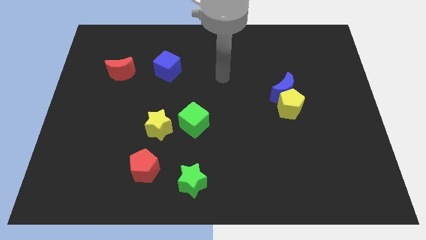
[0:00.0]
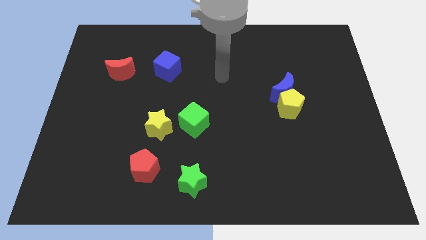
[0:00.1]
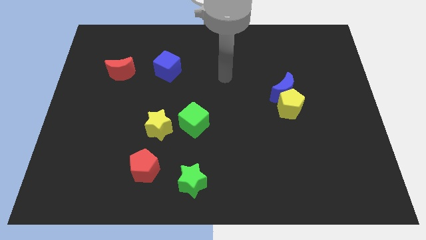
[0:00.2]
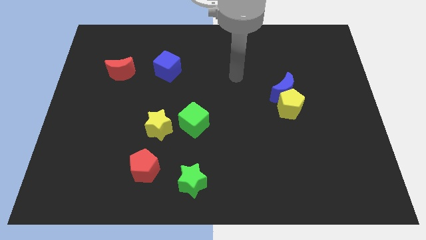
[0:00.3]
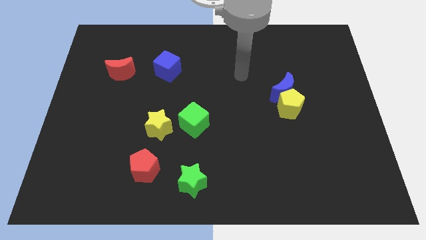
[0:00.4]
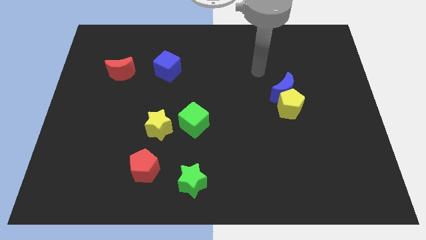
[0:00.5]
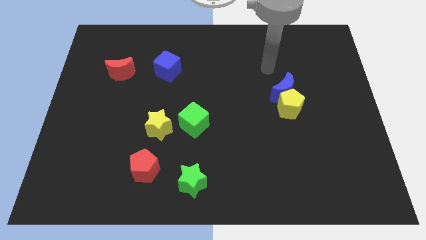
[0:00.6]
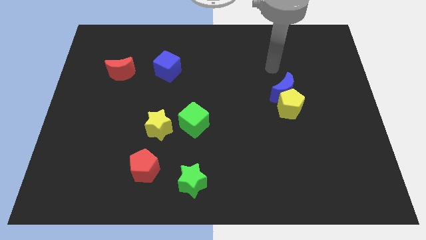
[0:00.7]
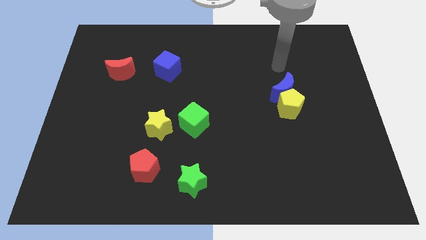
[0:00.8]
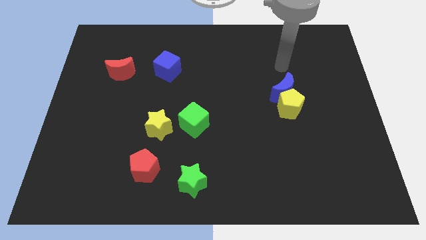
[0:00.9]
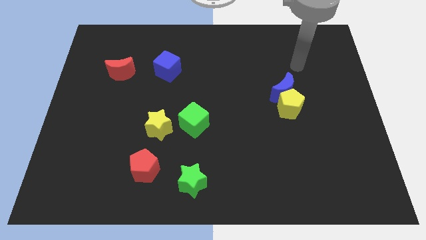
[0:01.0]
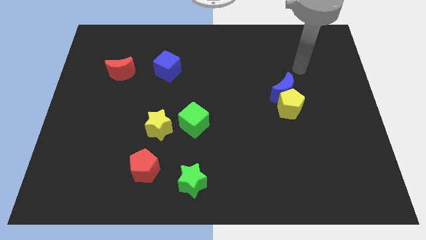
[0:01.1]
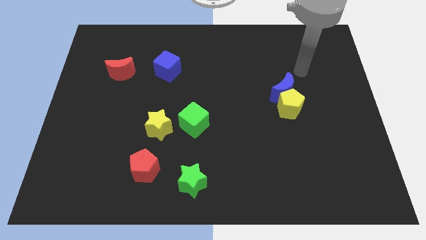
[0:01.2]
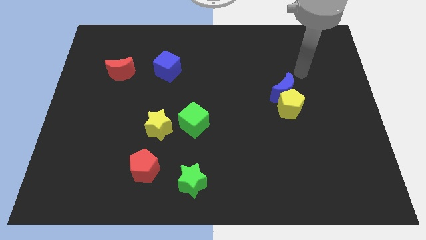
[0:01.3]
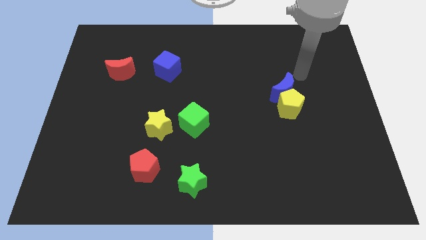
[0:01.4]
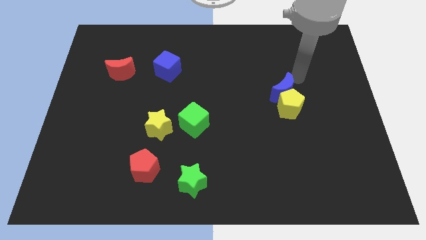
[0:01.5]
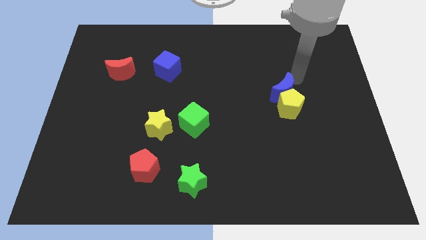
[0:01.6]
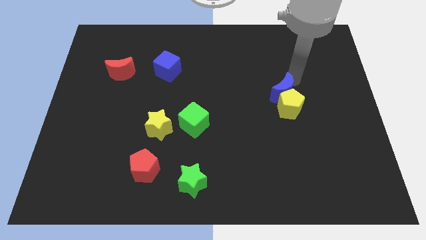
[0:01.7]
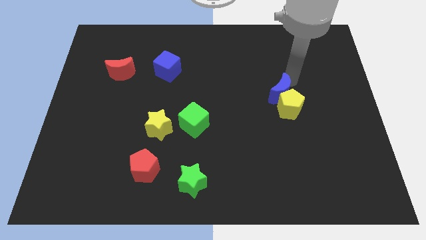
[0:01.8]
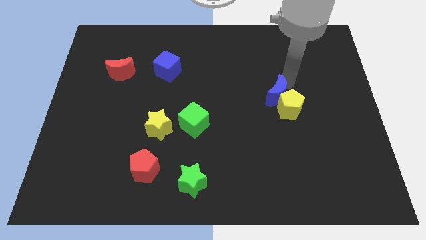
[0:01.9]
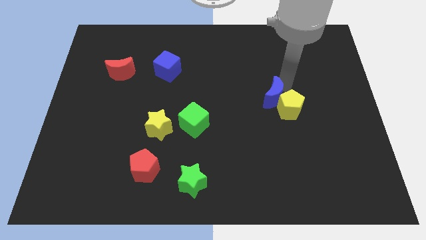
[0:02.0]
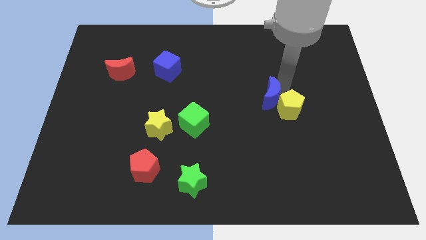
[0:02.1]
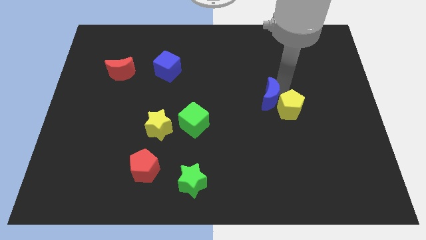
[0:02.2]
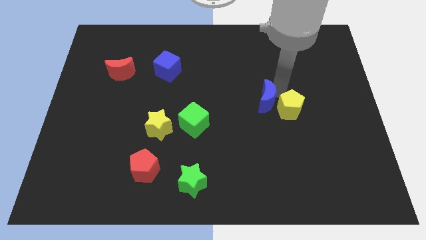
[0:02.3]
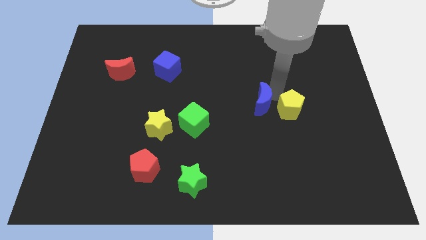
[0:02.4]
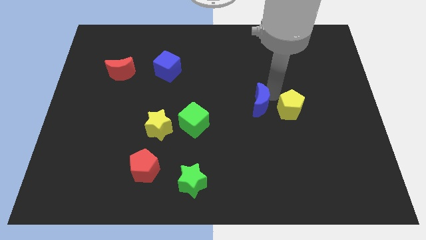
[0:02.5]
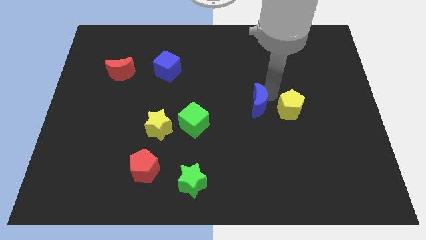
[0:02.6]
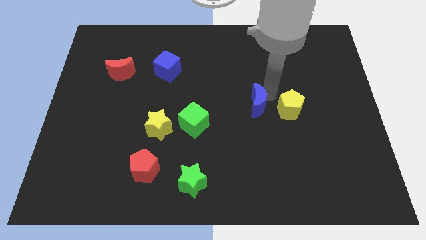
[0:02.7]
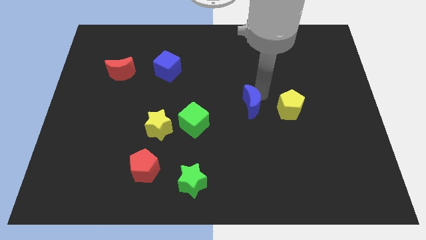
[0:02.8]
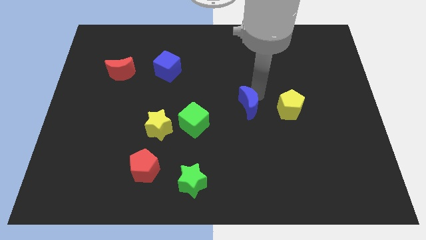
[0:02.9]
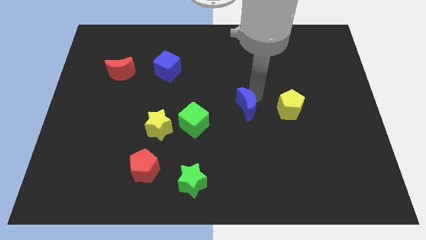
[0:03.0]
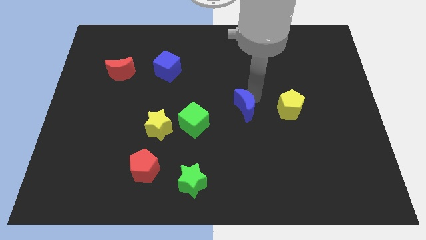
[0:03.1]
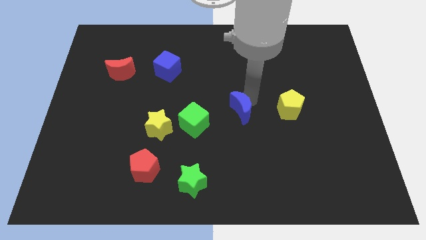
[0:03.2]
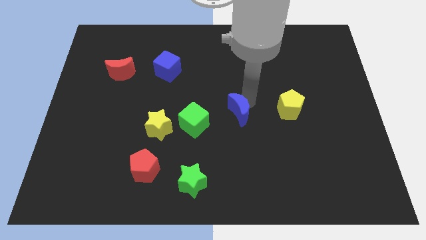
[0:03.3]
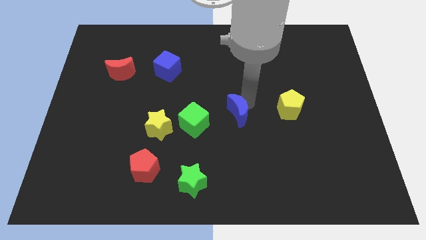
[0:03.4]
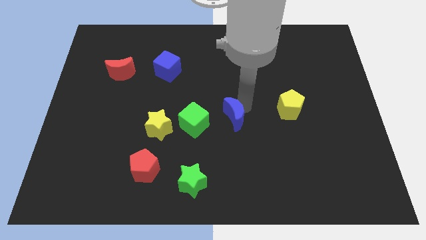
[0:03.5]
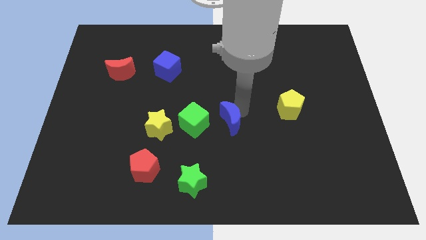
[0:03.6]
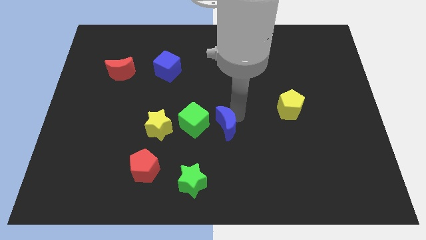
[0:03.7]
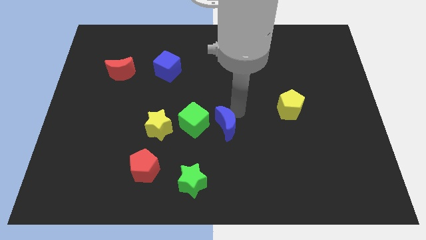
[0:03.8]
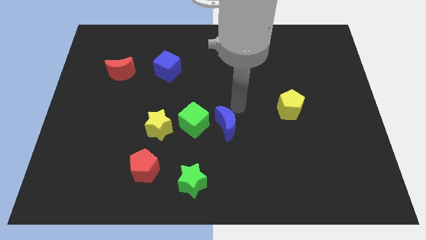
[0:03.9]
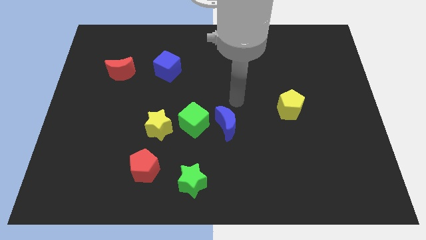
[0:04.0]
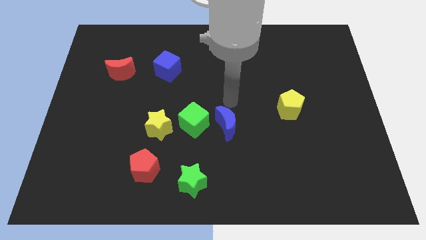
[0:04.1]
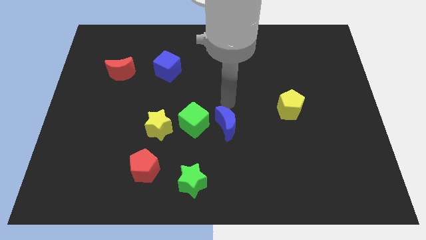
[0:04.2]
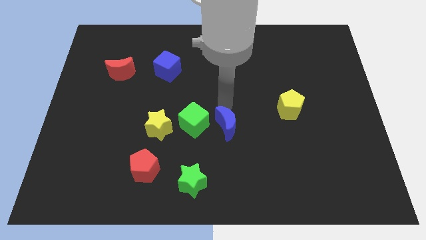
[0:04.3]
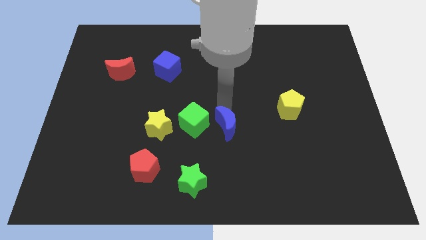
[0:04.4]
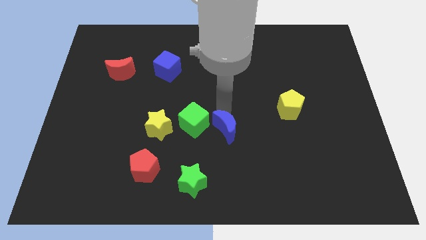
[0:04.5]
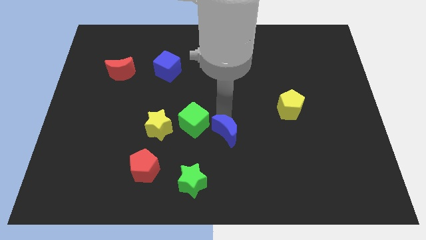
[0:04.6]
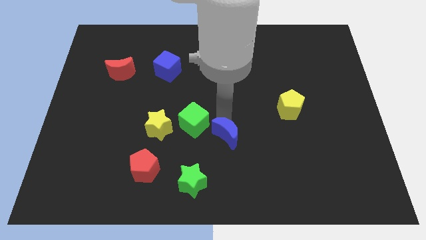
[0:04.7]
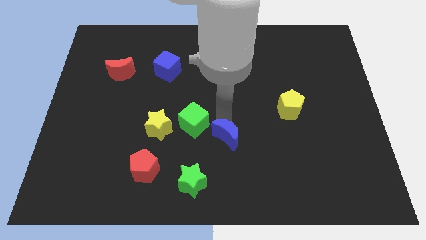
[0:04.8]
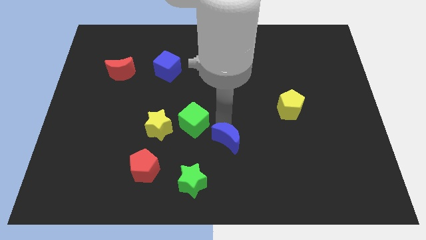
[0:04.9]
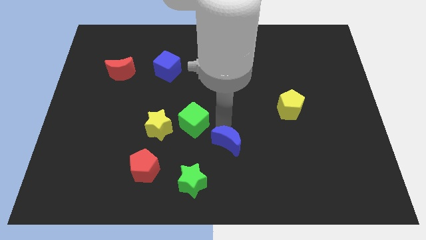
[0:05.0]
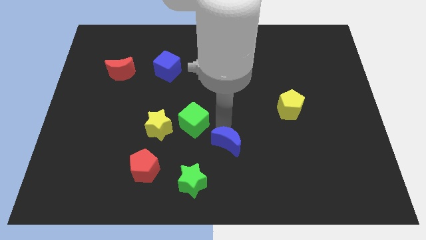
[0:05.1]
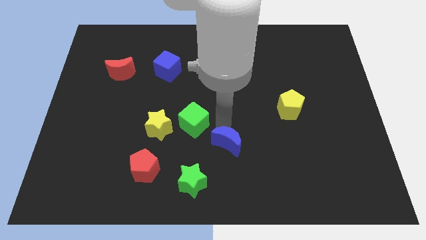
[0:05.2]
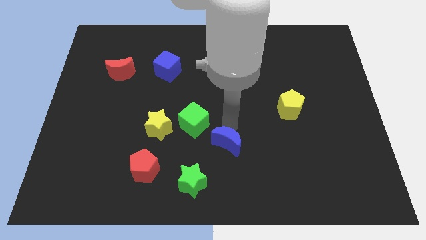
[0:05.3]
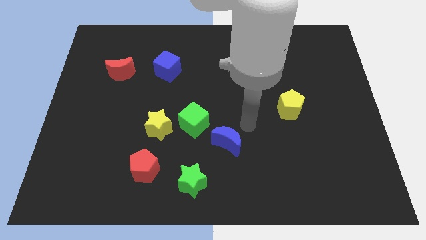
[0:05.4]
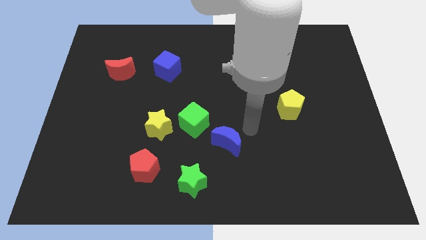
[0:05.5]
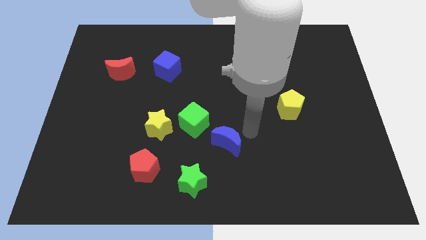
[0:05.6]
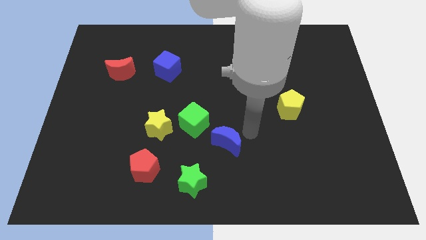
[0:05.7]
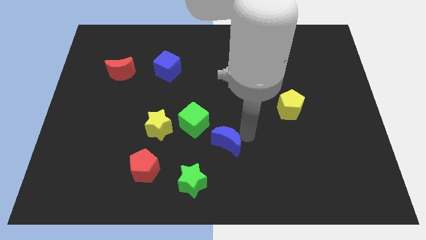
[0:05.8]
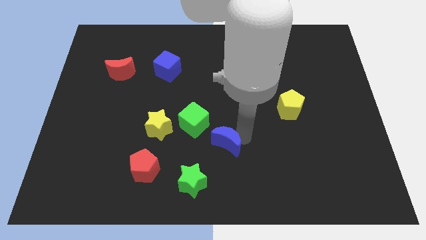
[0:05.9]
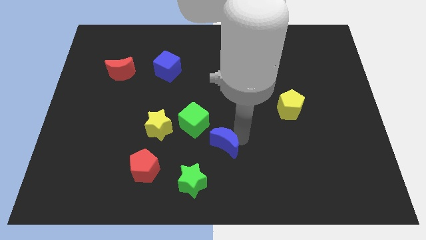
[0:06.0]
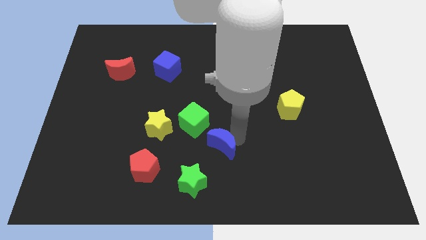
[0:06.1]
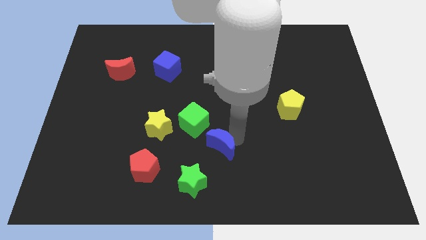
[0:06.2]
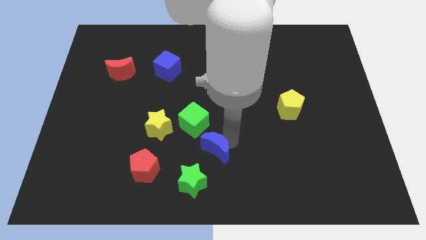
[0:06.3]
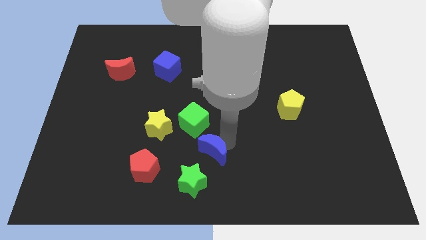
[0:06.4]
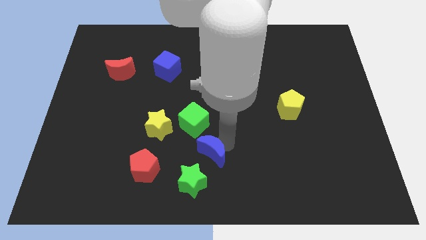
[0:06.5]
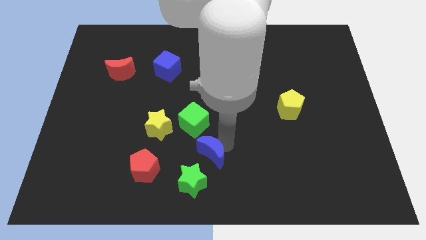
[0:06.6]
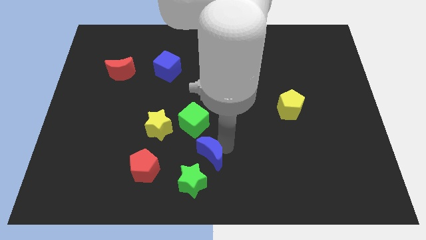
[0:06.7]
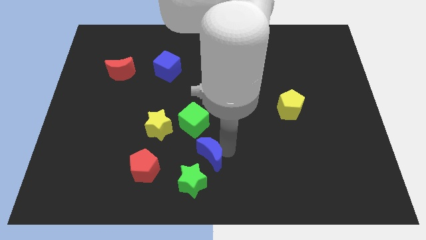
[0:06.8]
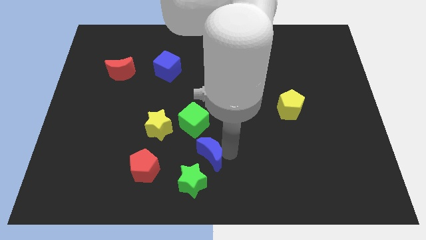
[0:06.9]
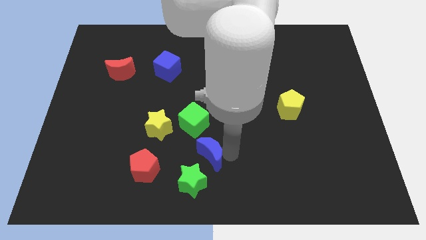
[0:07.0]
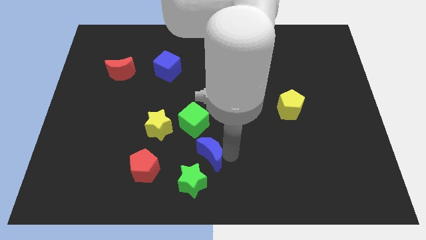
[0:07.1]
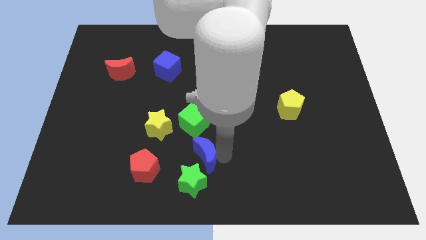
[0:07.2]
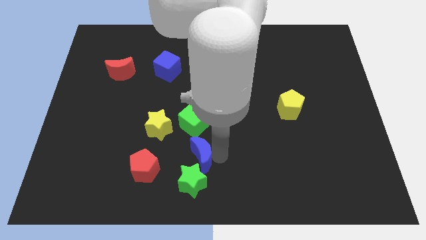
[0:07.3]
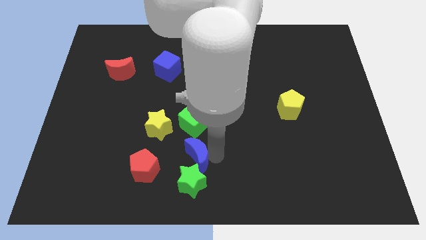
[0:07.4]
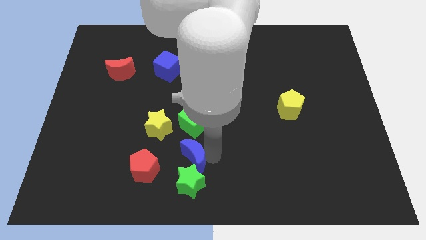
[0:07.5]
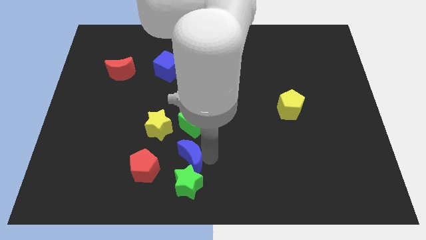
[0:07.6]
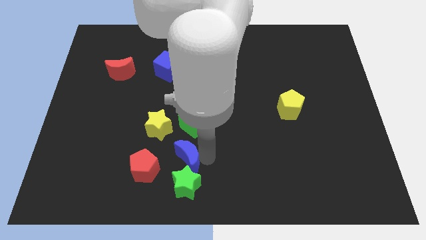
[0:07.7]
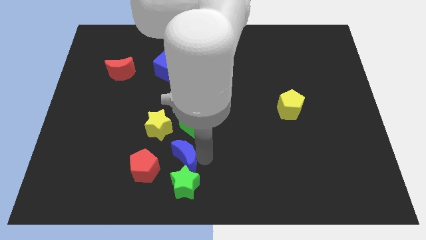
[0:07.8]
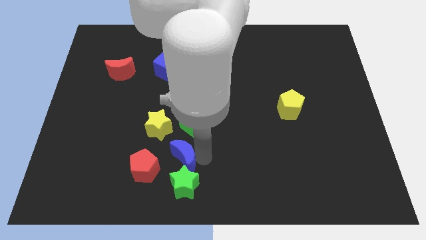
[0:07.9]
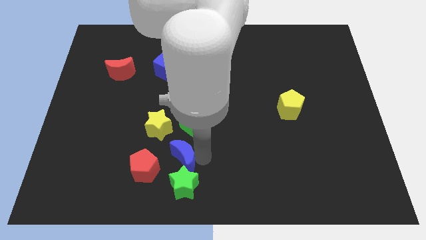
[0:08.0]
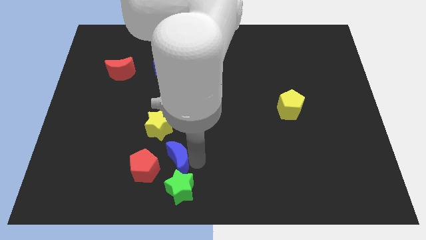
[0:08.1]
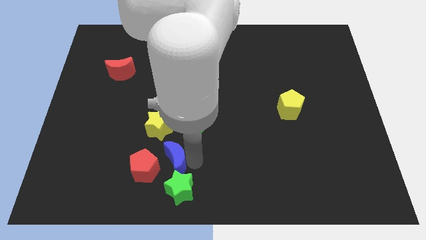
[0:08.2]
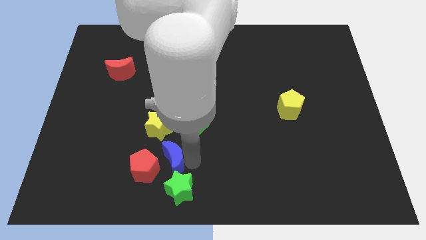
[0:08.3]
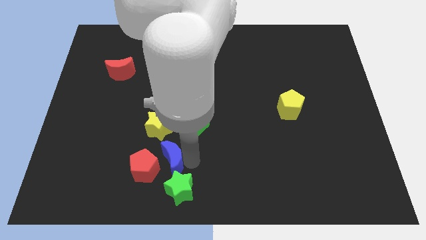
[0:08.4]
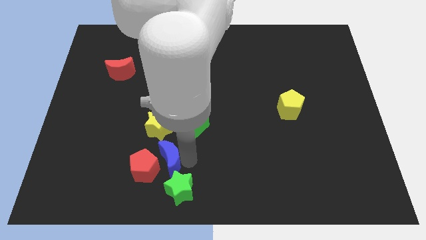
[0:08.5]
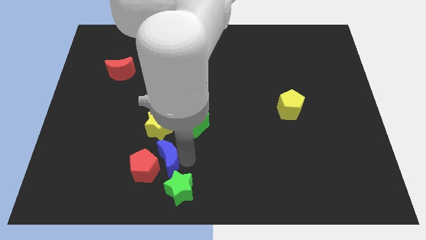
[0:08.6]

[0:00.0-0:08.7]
slide the blue moon next to the red pentagon
